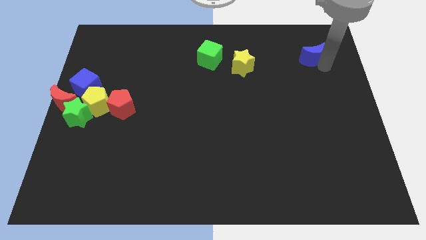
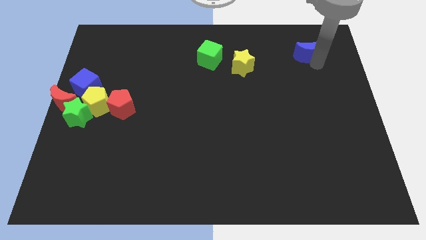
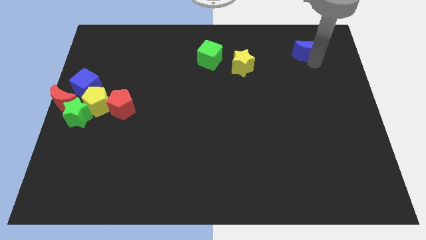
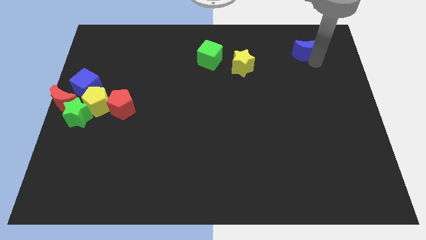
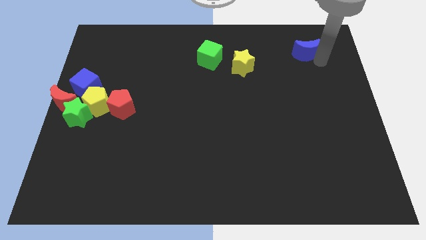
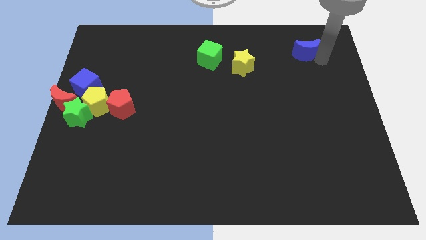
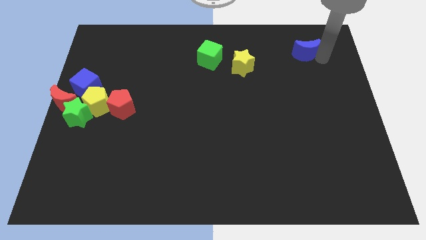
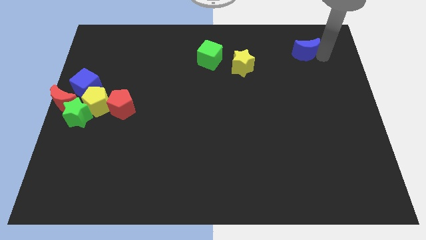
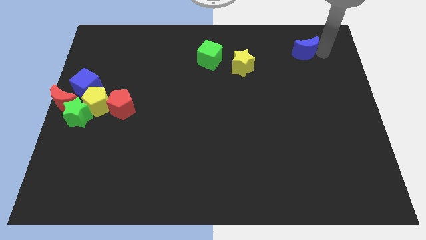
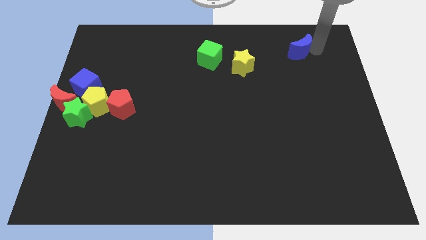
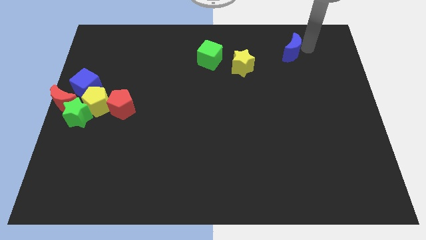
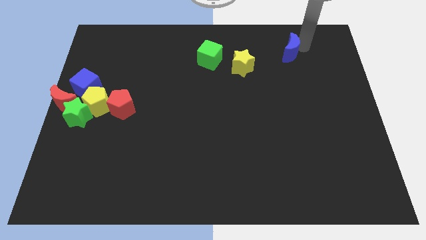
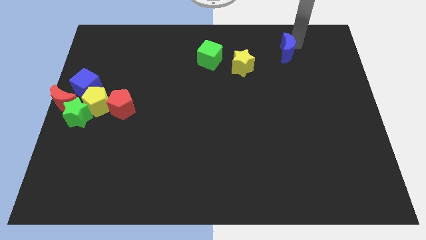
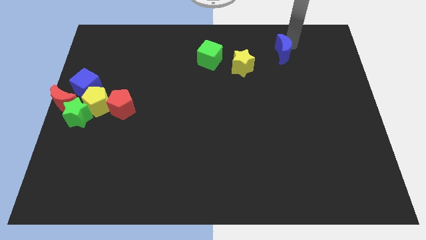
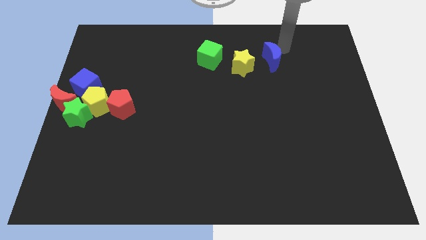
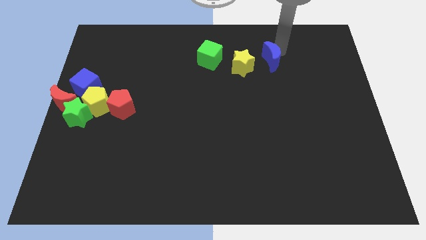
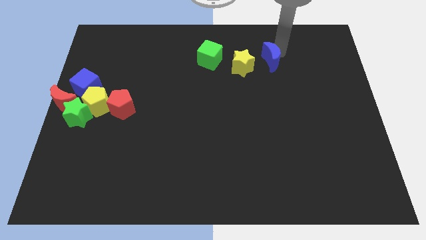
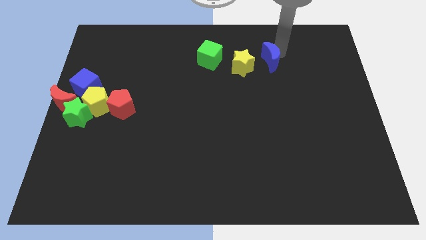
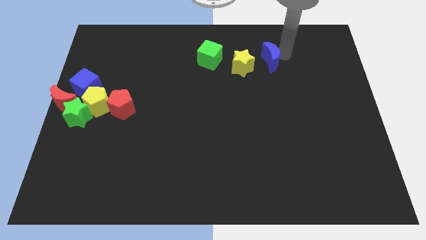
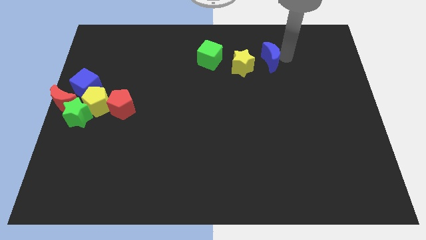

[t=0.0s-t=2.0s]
move the blue crescent to the right side of the yellow star

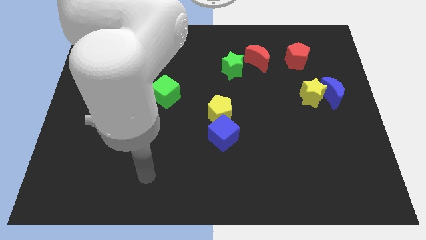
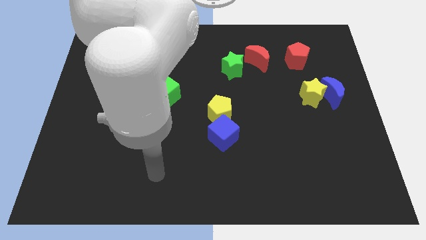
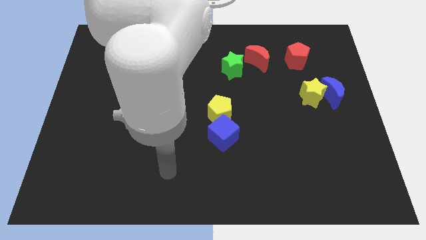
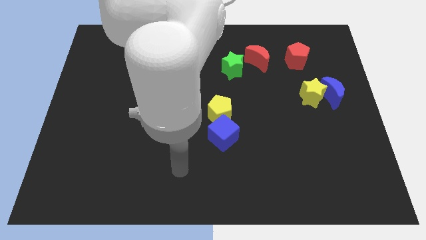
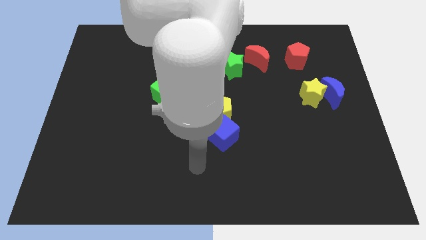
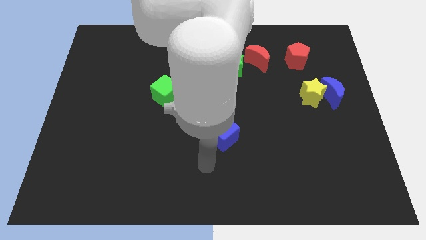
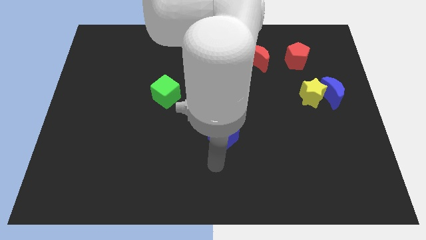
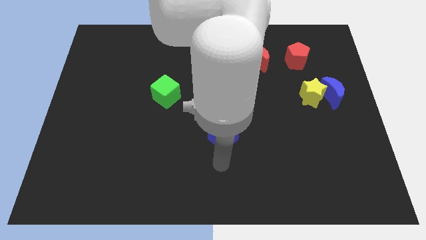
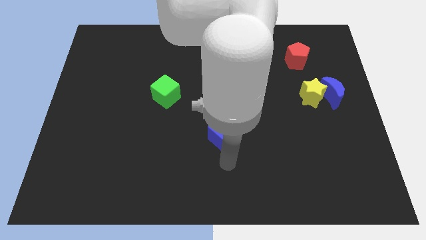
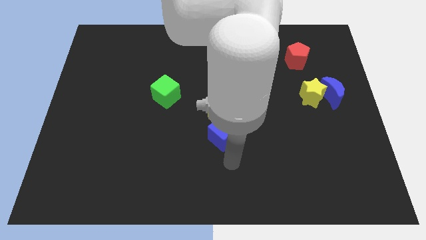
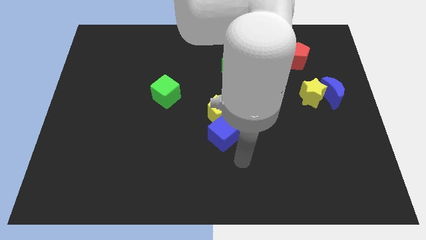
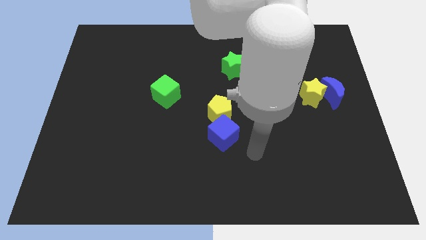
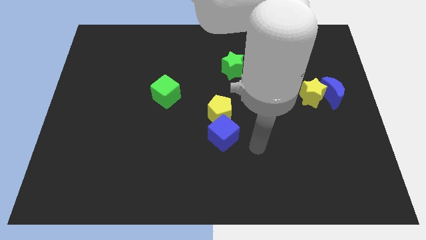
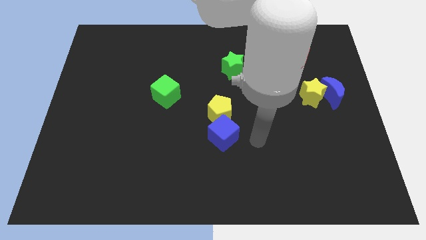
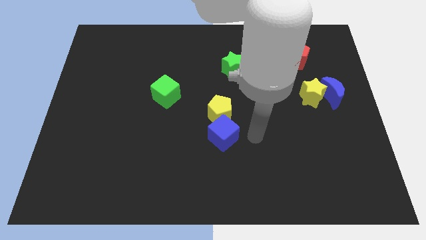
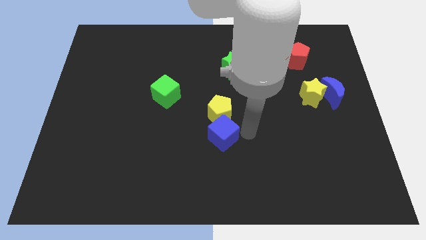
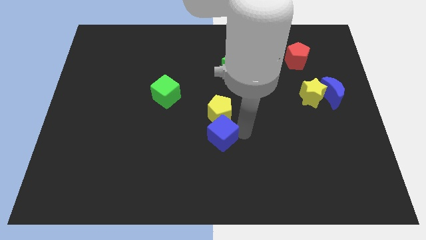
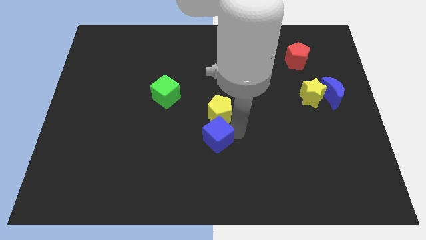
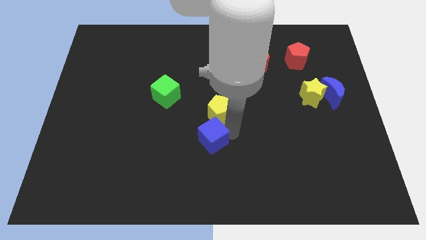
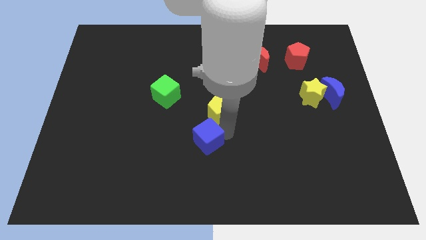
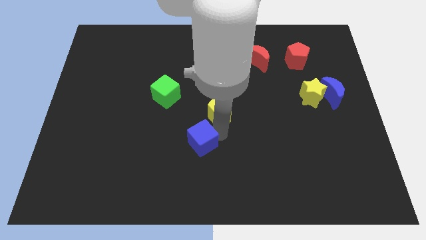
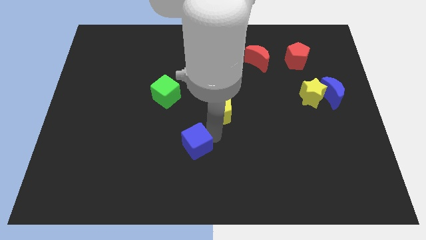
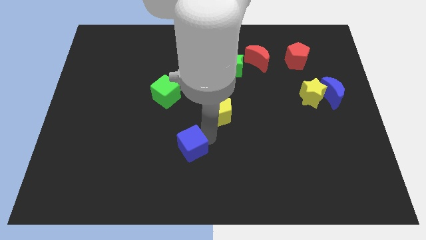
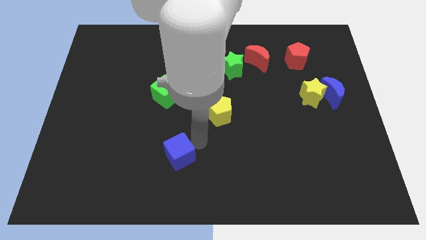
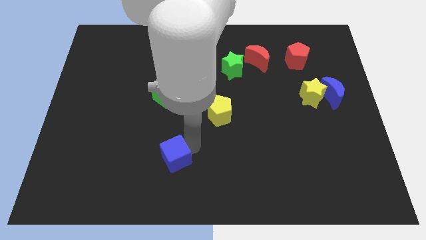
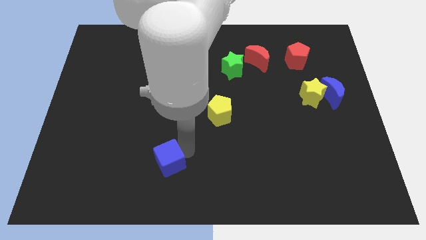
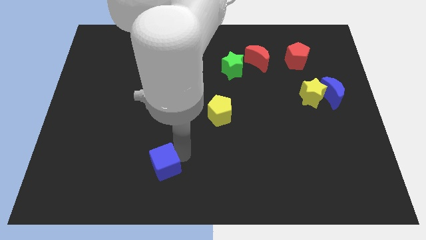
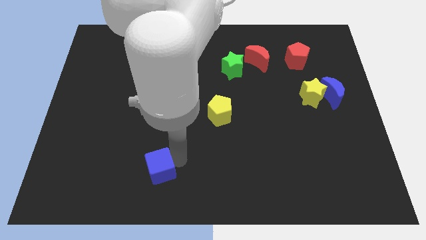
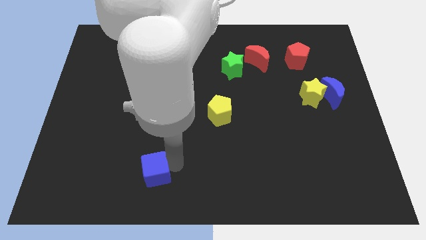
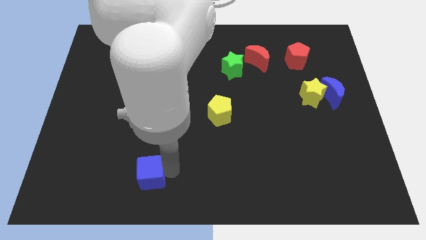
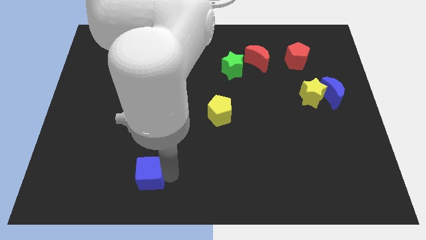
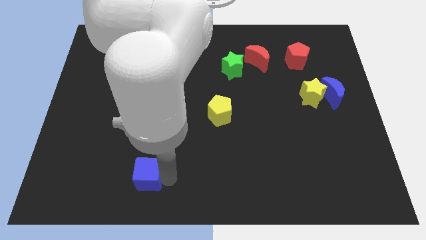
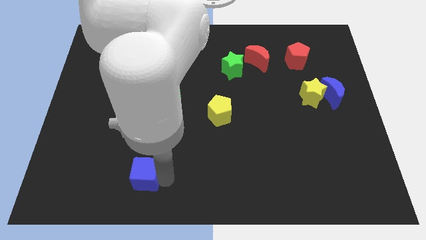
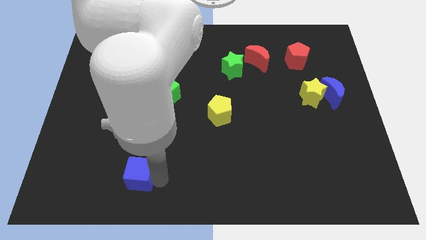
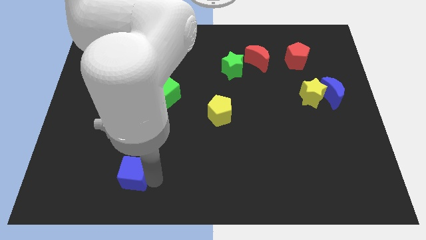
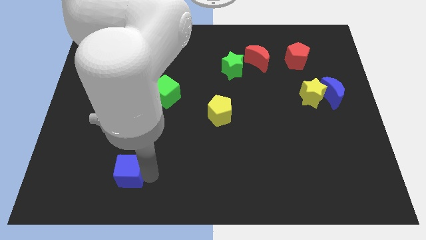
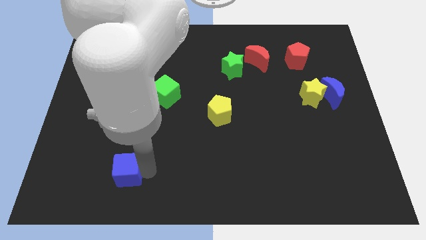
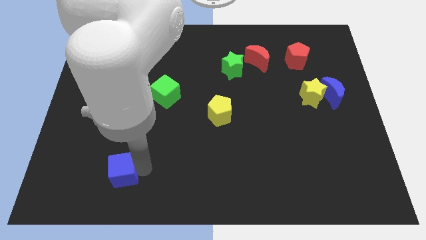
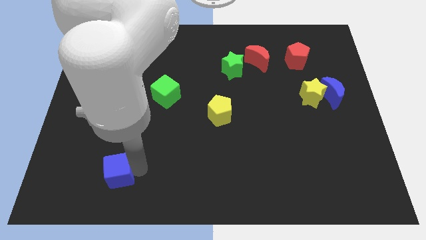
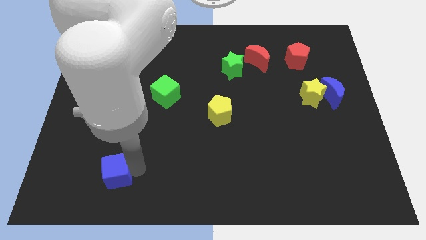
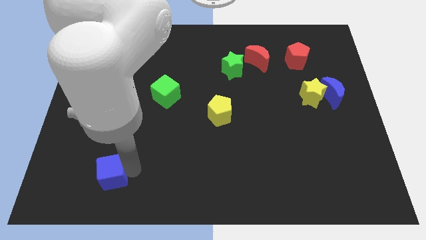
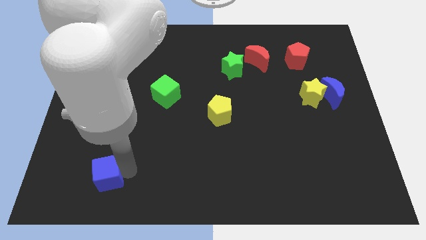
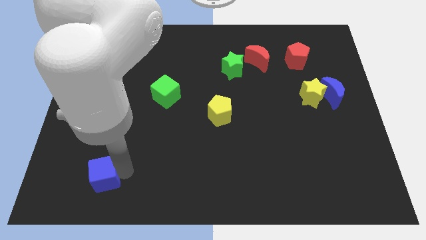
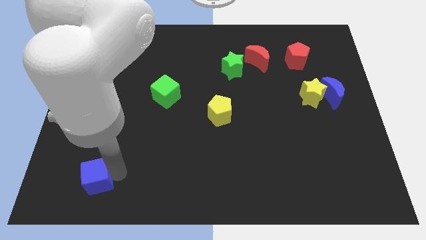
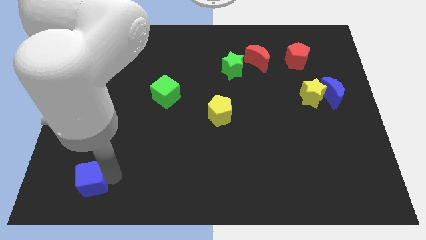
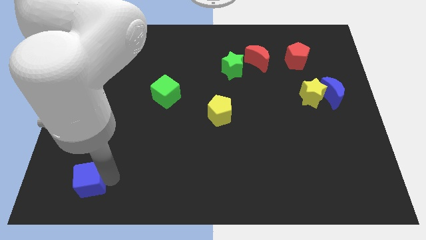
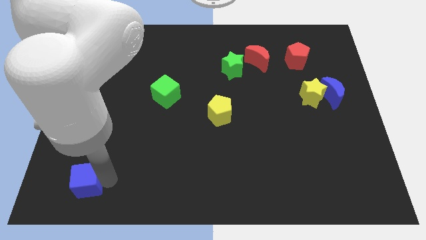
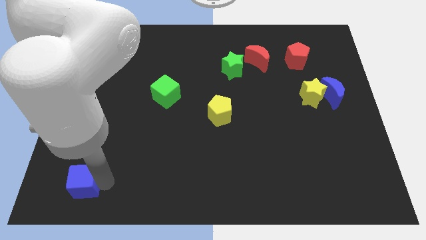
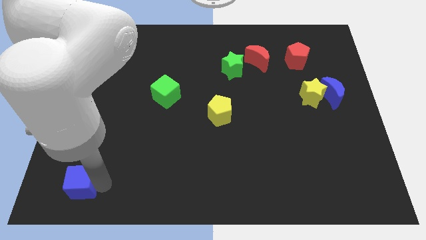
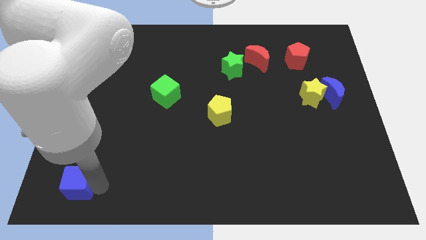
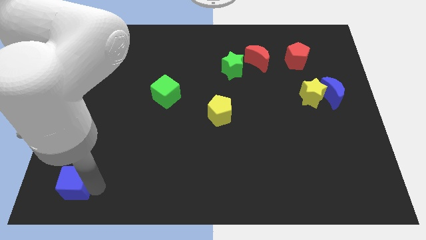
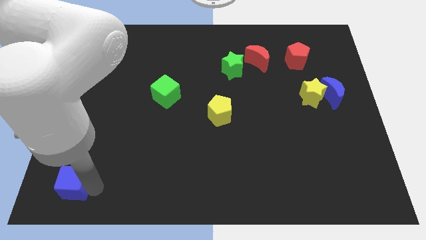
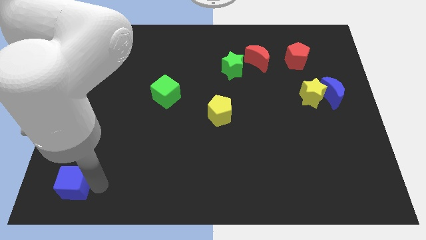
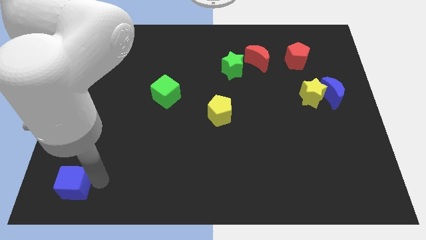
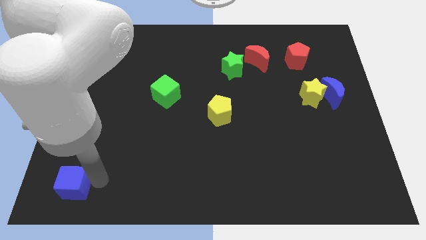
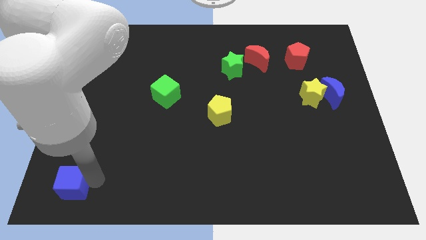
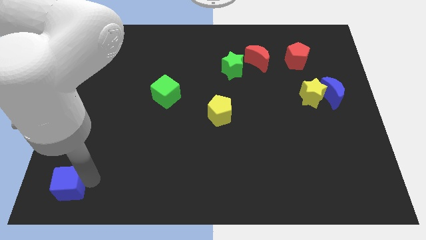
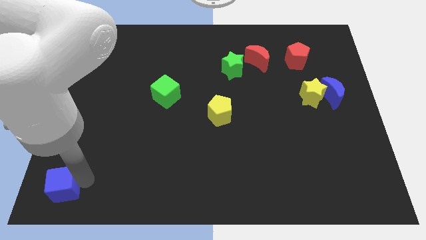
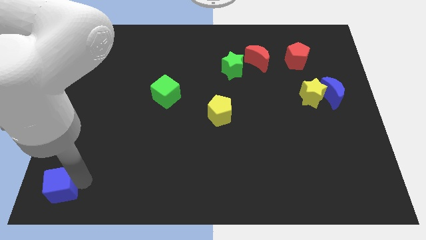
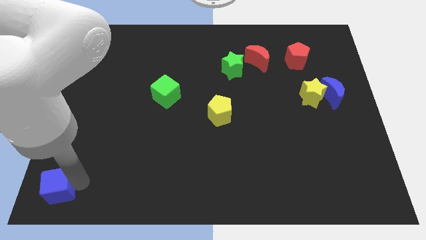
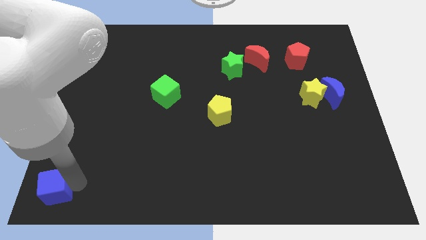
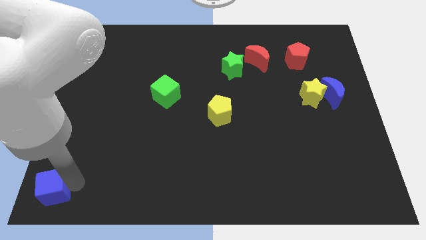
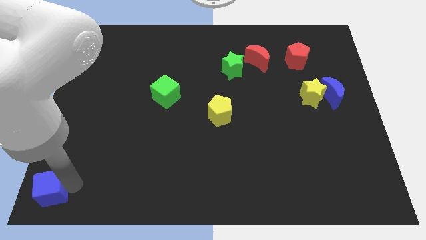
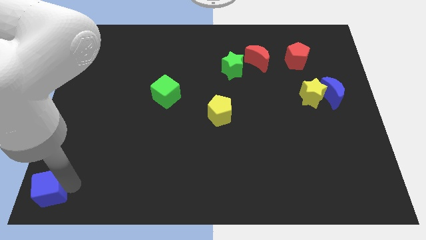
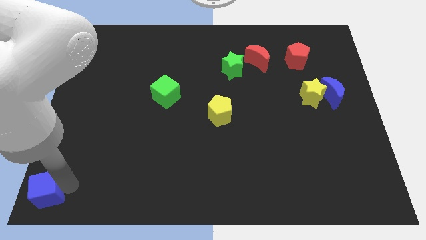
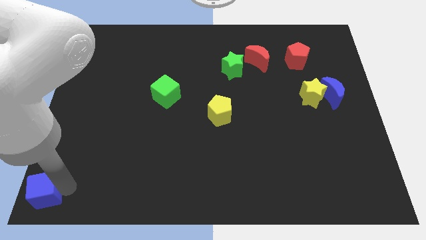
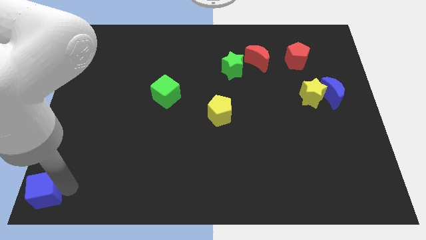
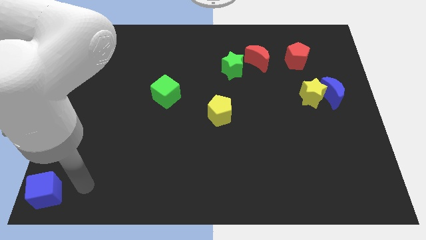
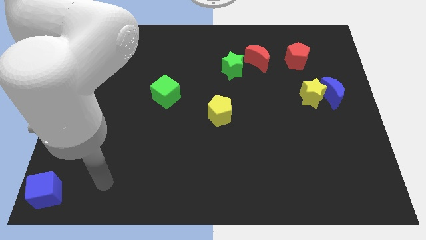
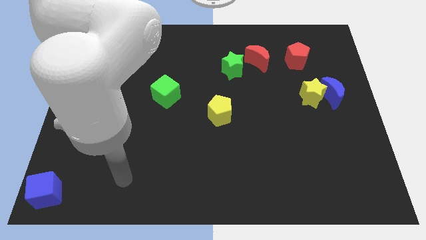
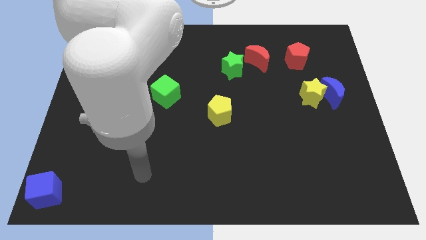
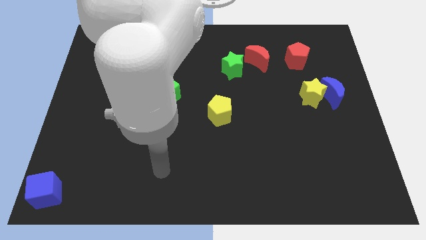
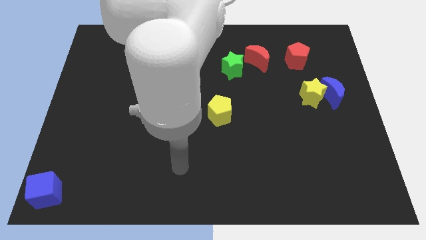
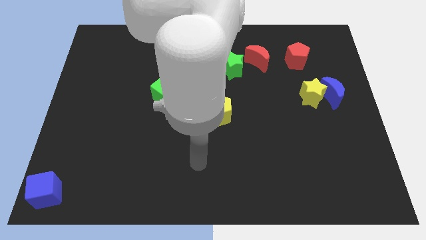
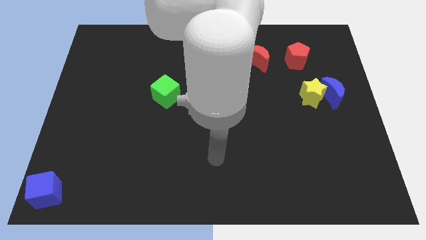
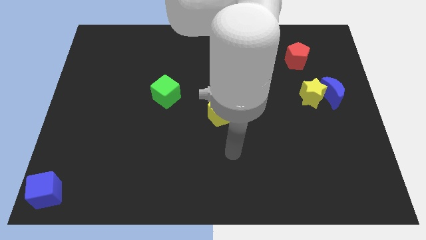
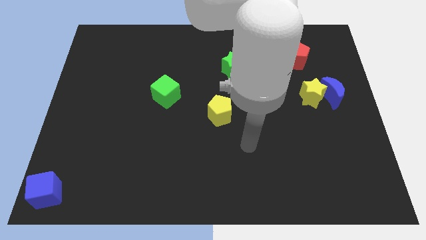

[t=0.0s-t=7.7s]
place blue cube below left corner
